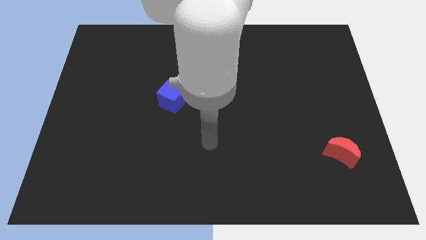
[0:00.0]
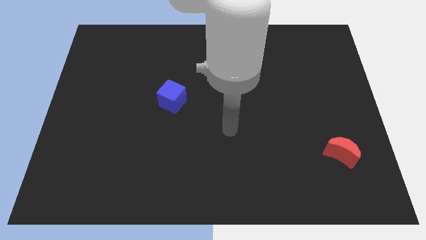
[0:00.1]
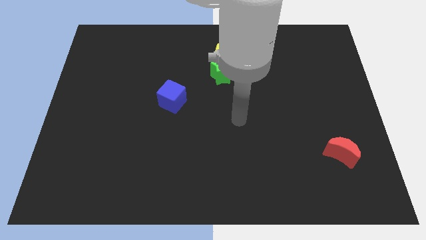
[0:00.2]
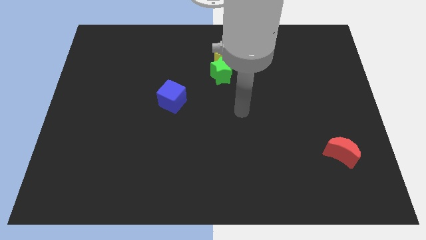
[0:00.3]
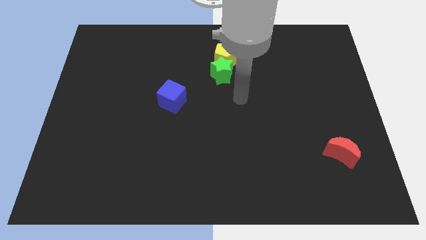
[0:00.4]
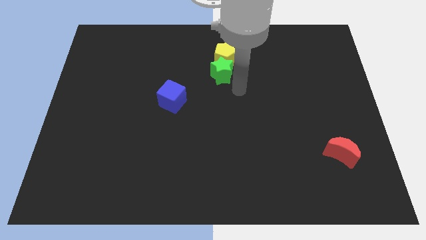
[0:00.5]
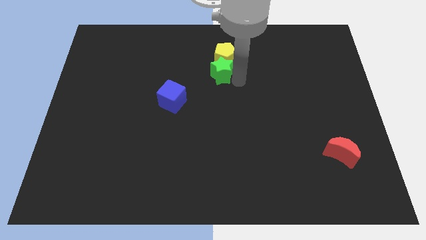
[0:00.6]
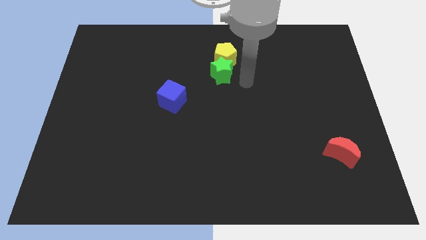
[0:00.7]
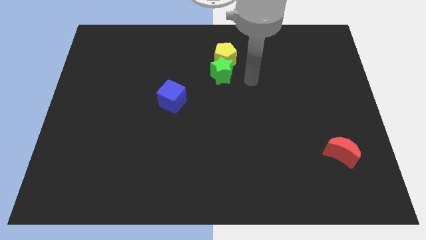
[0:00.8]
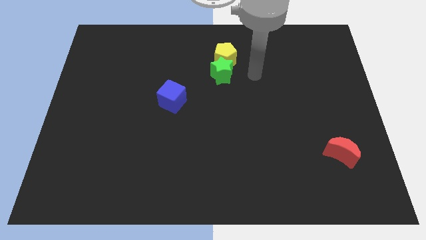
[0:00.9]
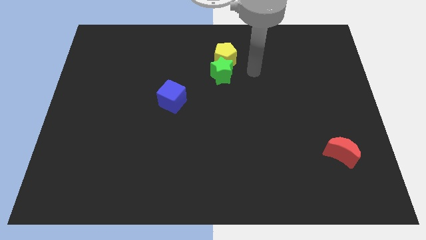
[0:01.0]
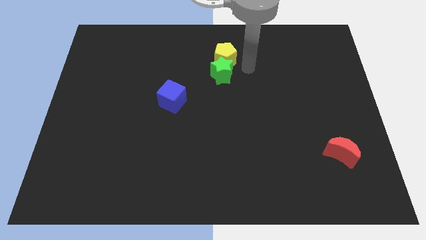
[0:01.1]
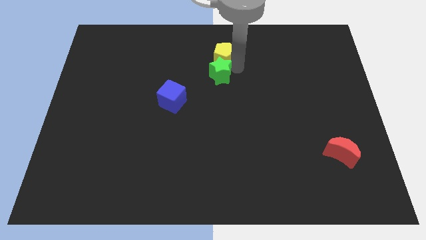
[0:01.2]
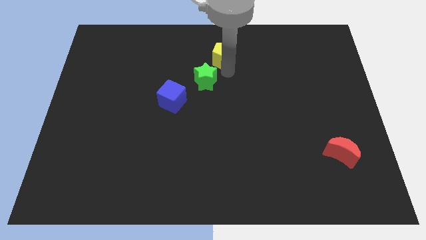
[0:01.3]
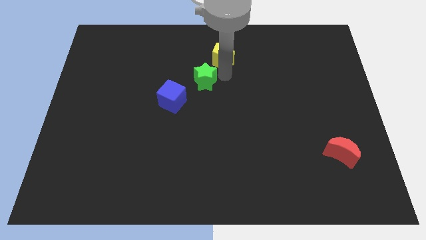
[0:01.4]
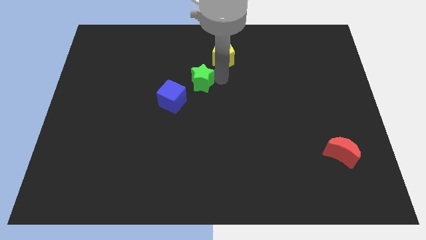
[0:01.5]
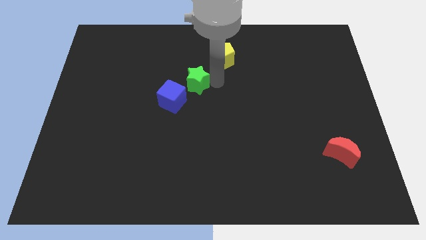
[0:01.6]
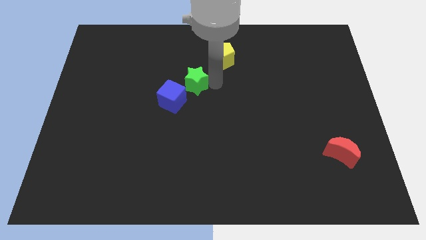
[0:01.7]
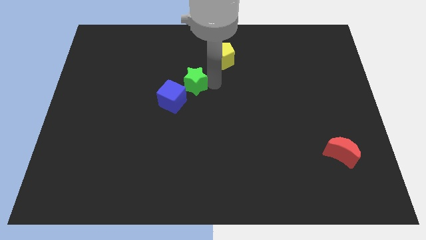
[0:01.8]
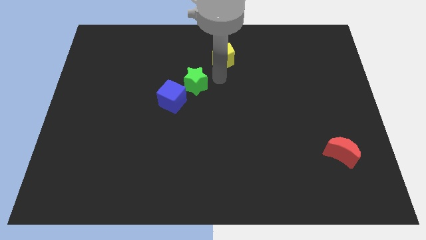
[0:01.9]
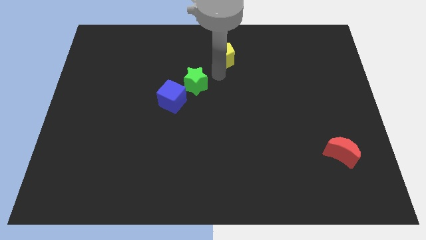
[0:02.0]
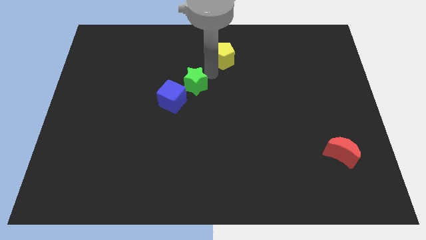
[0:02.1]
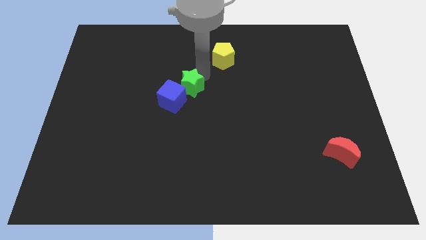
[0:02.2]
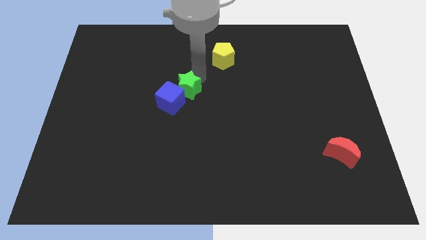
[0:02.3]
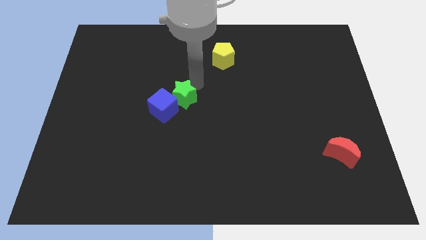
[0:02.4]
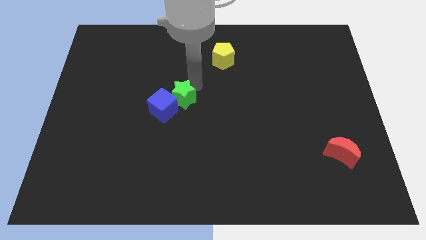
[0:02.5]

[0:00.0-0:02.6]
move the green star towards the blue cube

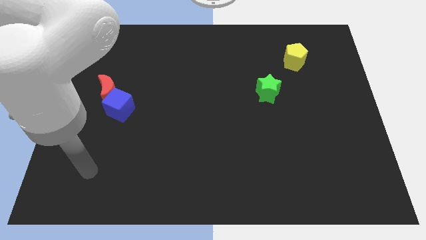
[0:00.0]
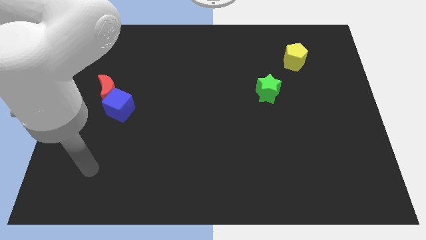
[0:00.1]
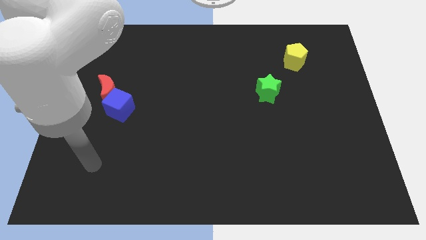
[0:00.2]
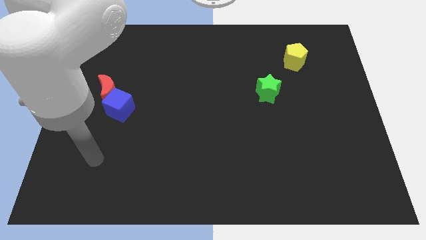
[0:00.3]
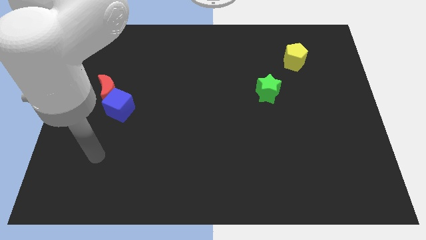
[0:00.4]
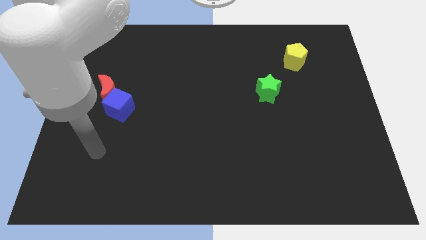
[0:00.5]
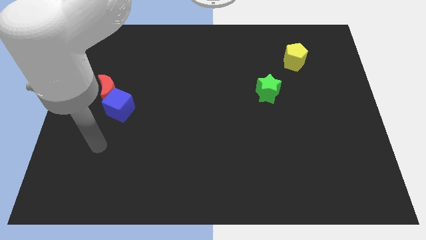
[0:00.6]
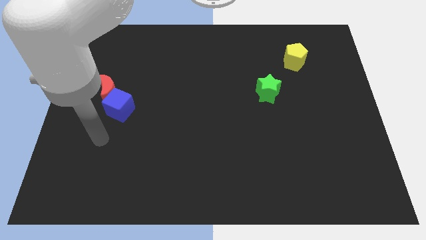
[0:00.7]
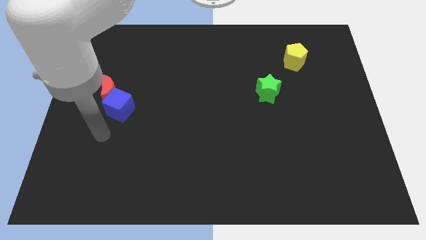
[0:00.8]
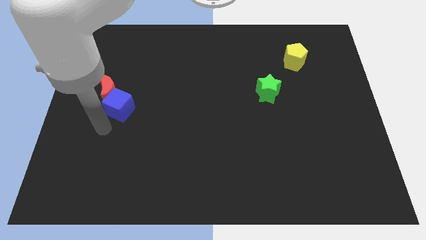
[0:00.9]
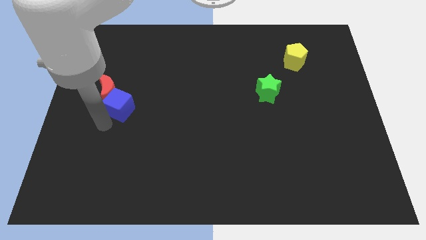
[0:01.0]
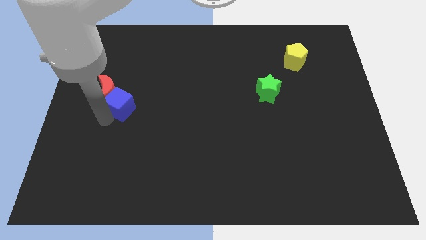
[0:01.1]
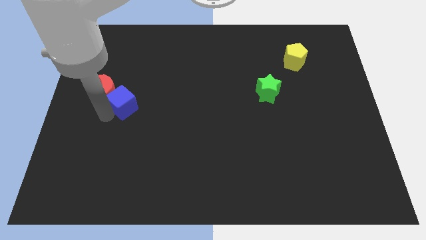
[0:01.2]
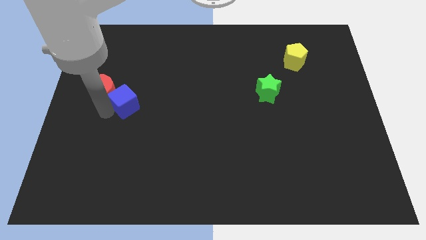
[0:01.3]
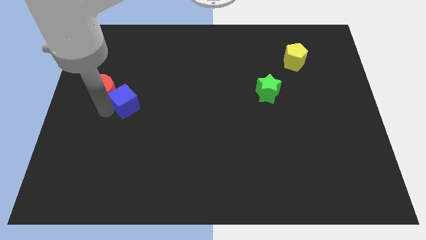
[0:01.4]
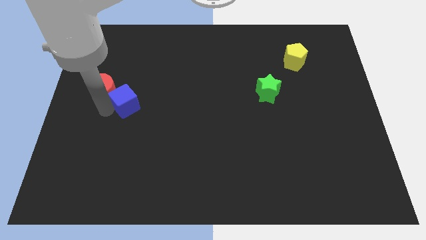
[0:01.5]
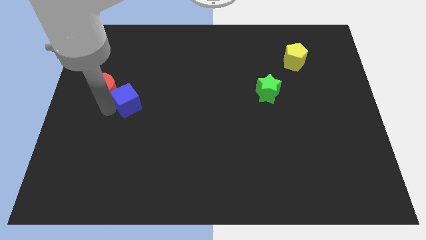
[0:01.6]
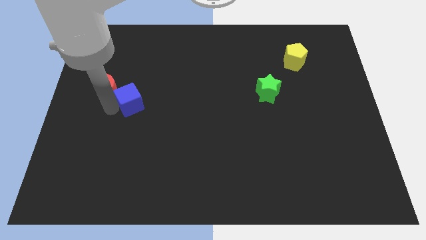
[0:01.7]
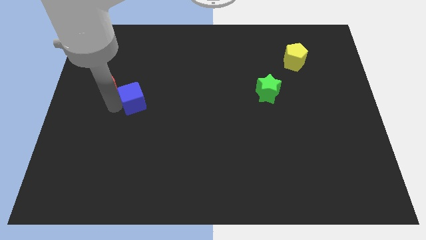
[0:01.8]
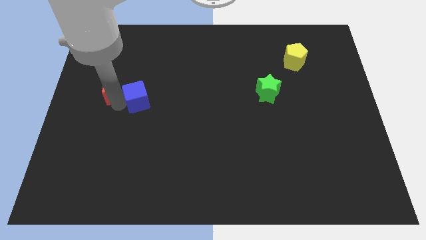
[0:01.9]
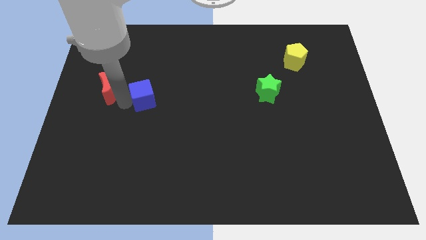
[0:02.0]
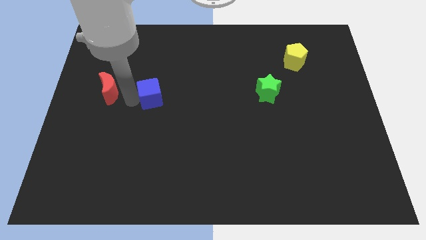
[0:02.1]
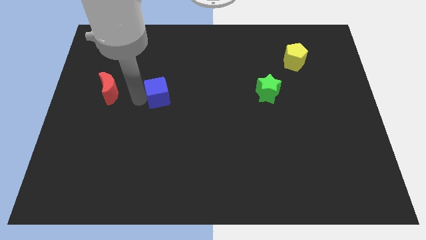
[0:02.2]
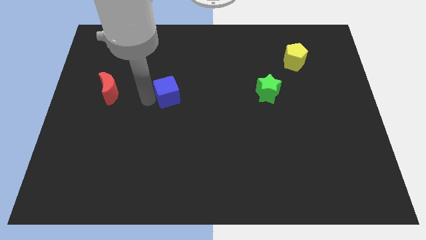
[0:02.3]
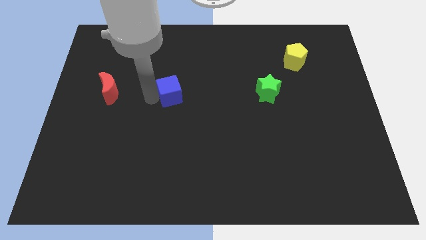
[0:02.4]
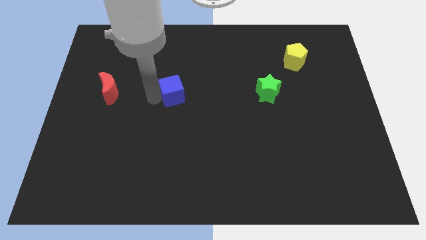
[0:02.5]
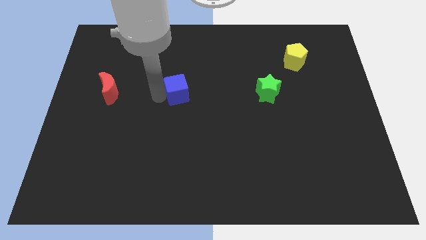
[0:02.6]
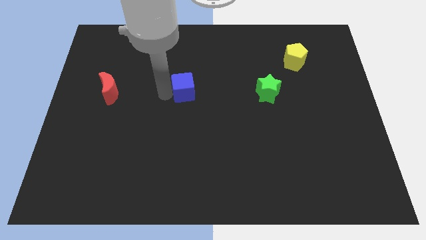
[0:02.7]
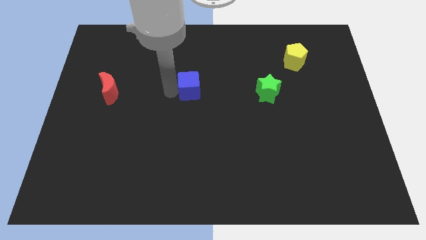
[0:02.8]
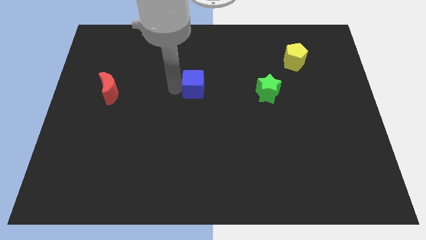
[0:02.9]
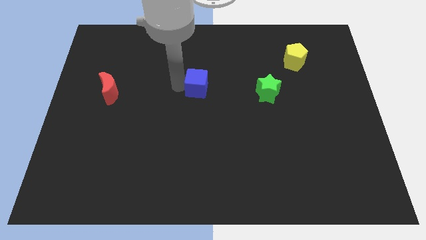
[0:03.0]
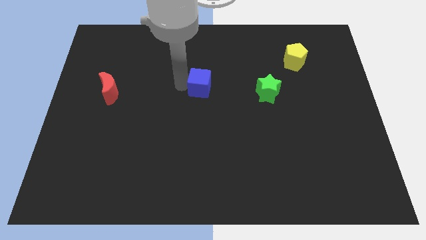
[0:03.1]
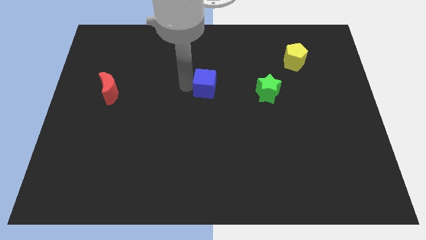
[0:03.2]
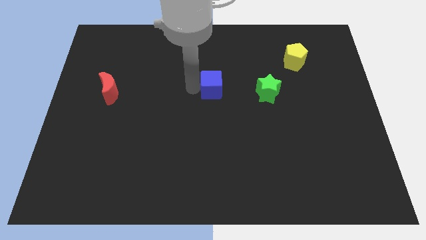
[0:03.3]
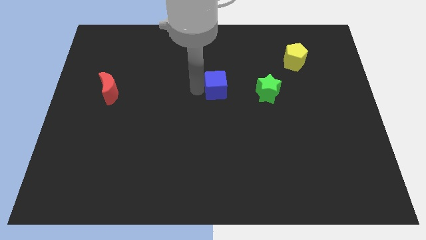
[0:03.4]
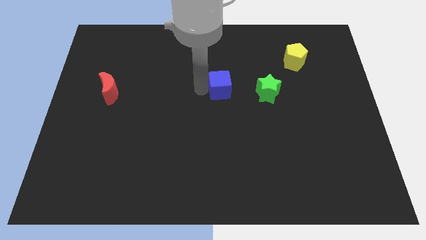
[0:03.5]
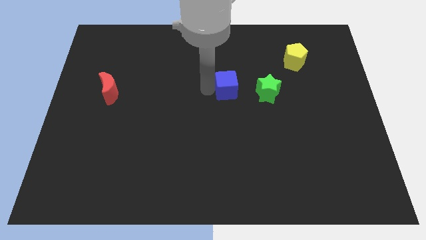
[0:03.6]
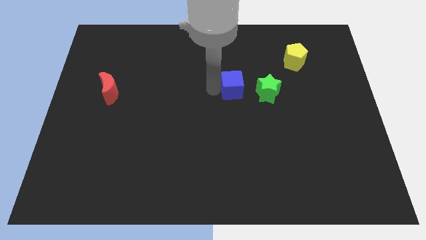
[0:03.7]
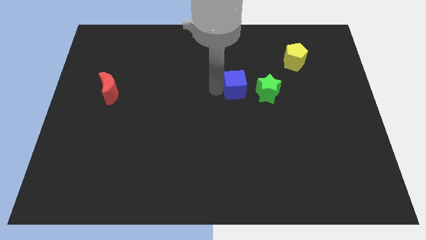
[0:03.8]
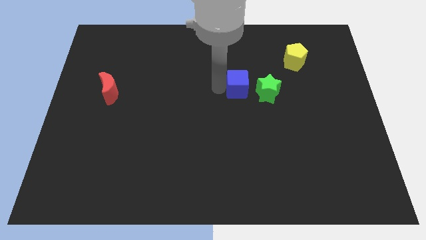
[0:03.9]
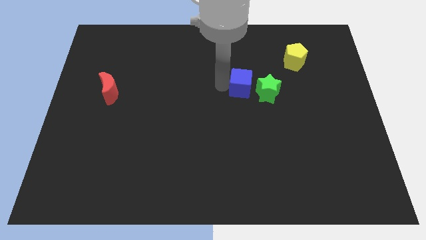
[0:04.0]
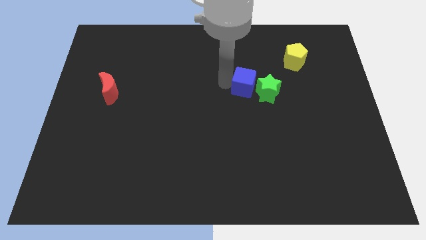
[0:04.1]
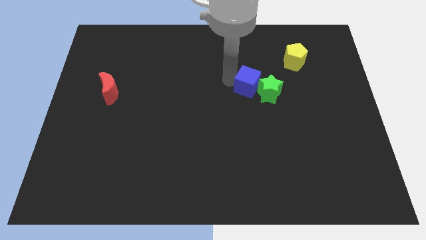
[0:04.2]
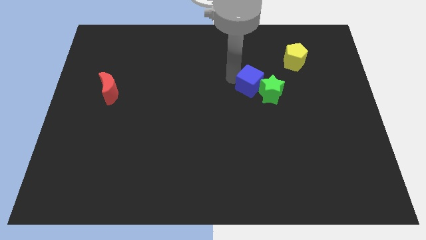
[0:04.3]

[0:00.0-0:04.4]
push the blue cube close to the star

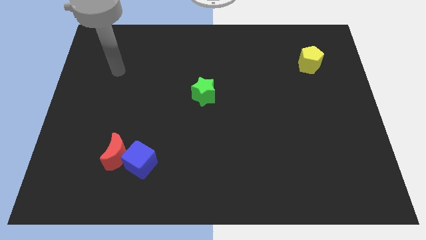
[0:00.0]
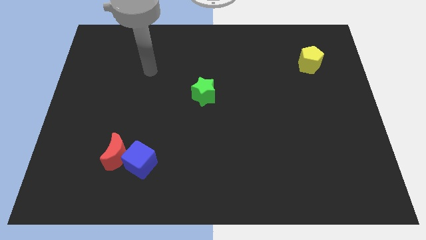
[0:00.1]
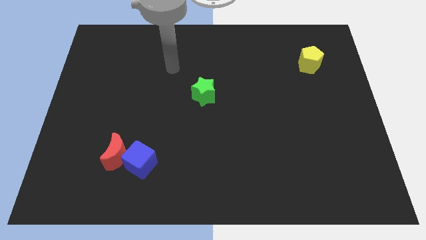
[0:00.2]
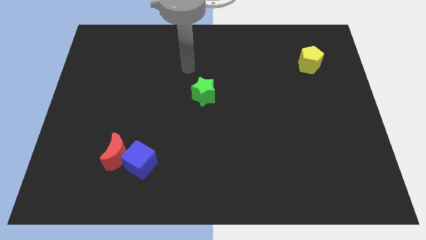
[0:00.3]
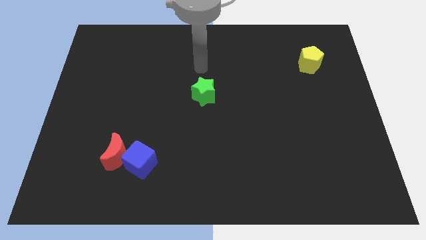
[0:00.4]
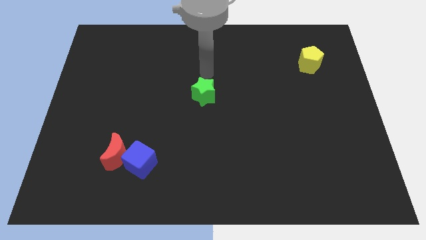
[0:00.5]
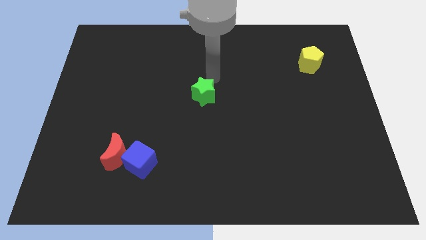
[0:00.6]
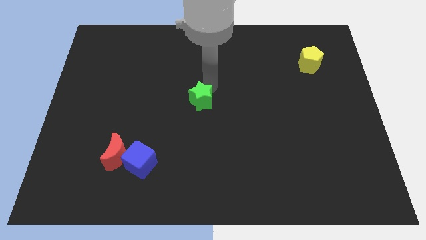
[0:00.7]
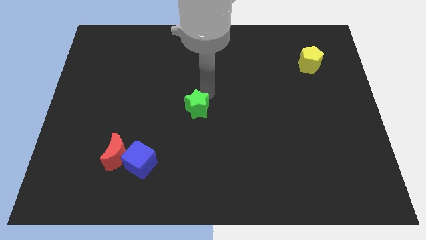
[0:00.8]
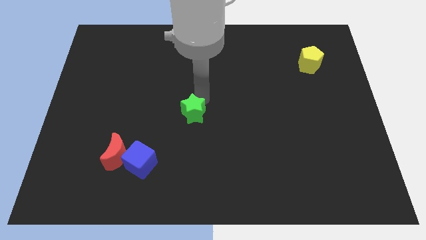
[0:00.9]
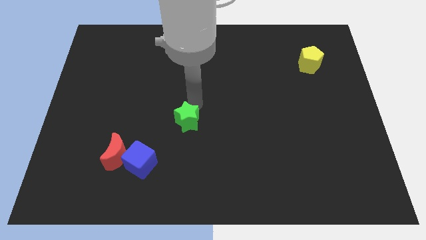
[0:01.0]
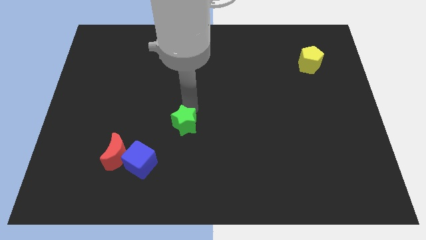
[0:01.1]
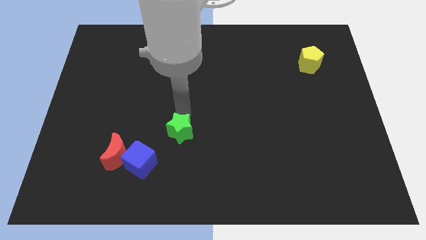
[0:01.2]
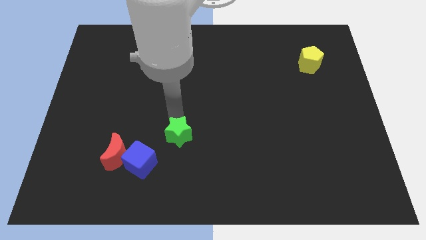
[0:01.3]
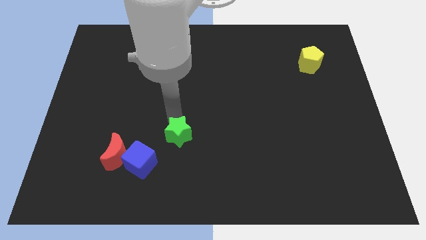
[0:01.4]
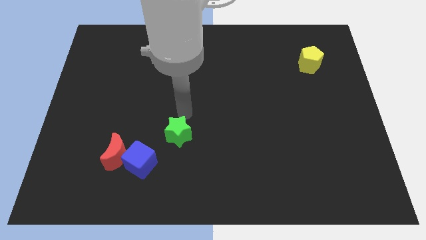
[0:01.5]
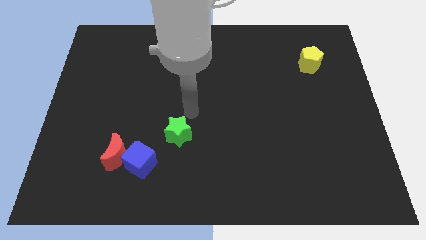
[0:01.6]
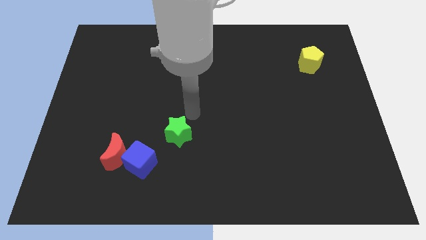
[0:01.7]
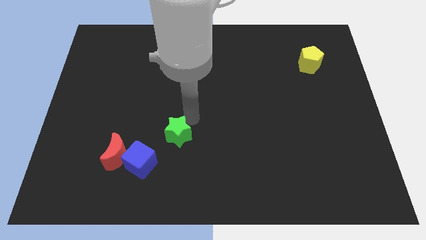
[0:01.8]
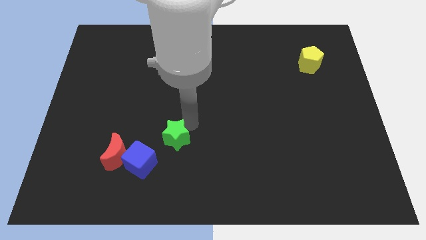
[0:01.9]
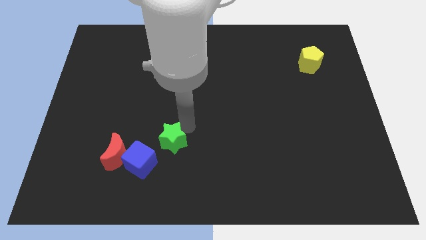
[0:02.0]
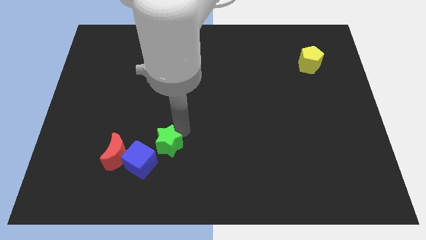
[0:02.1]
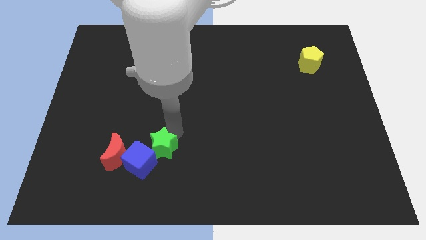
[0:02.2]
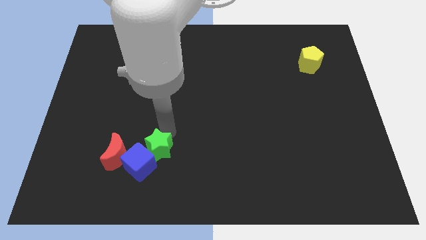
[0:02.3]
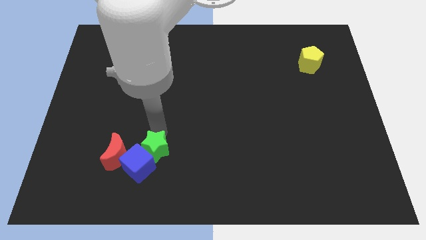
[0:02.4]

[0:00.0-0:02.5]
slide the green block next to the blue cube
